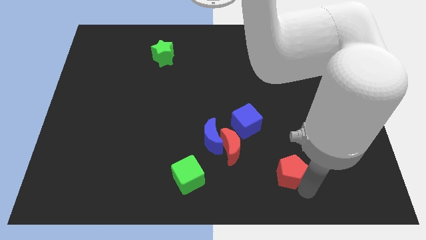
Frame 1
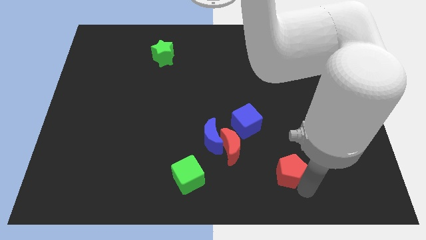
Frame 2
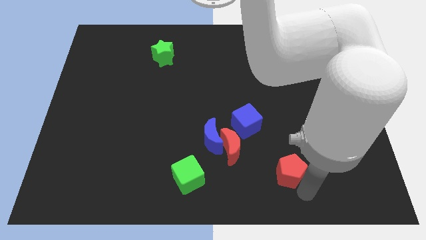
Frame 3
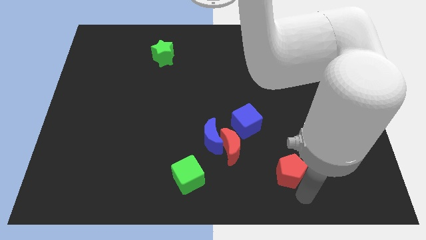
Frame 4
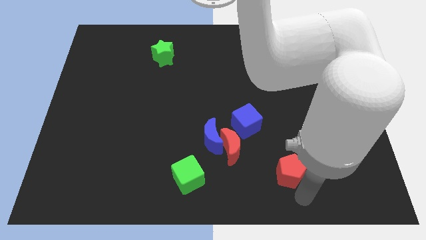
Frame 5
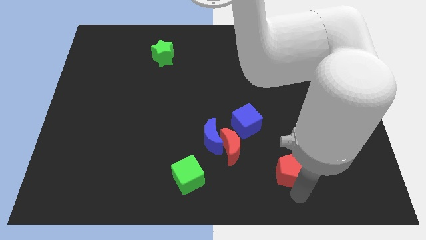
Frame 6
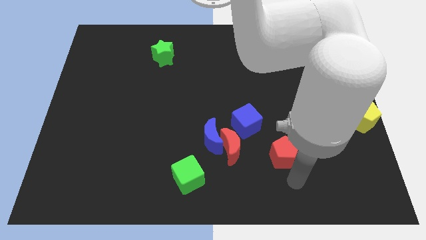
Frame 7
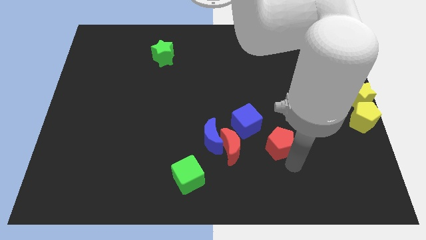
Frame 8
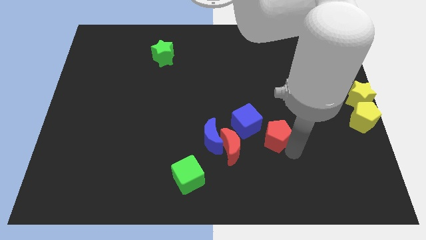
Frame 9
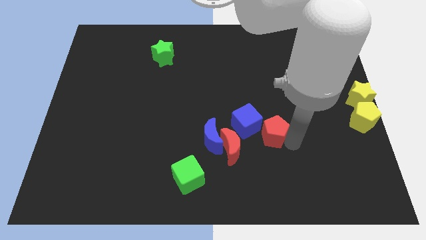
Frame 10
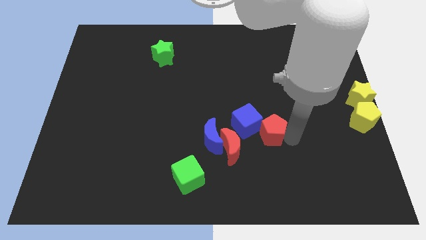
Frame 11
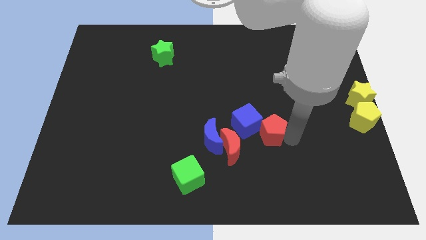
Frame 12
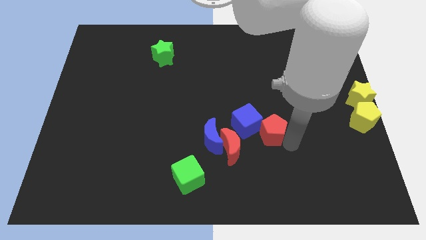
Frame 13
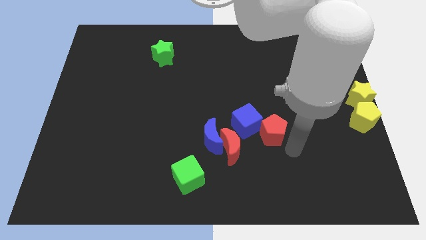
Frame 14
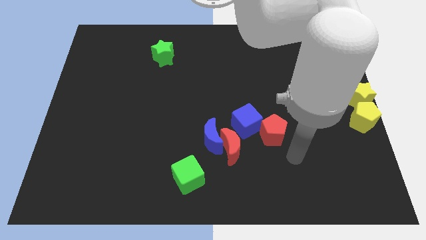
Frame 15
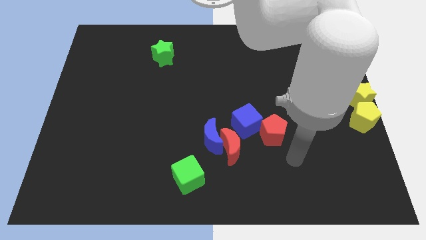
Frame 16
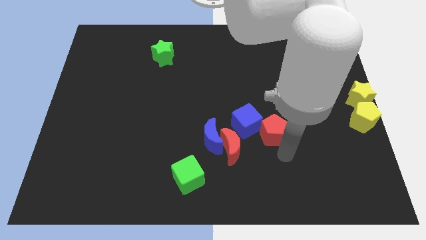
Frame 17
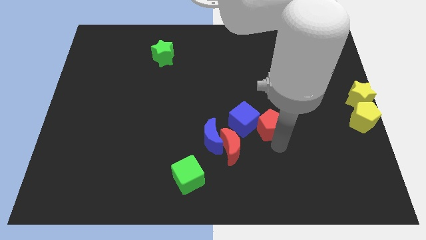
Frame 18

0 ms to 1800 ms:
place red pentagon to the bottom right of the blue cube

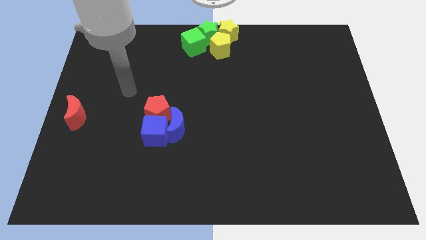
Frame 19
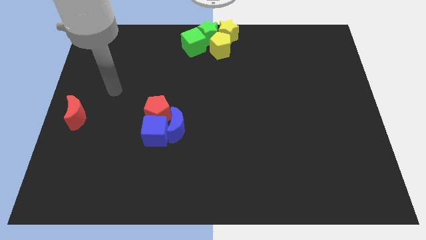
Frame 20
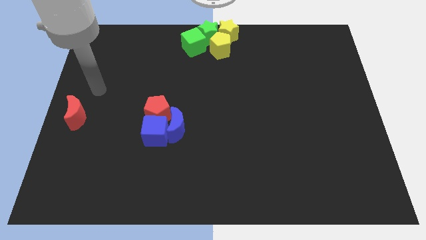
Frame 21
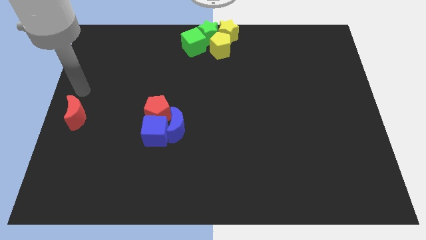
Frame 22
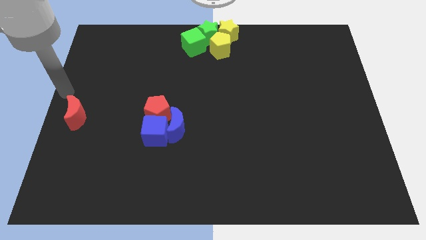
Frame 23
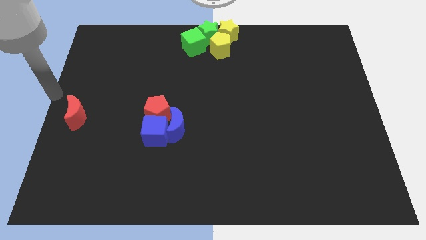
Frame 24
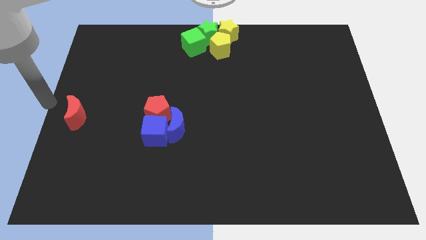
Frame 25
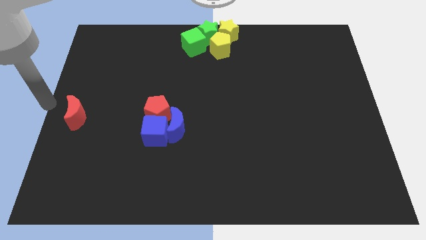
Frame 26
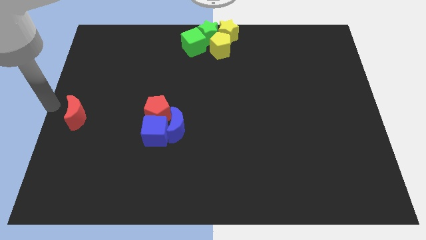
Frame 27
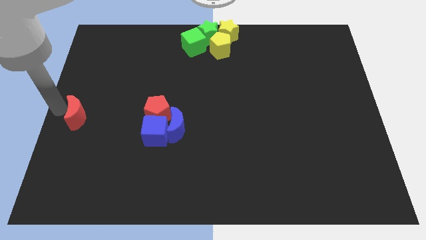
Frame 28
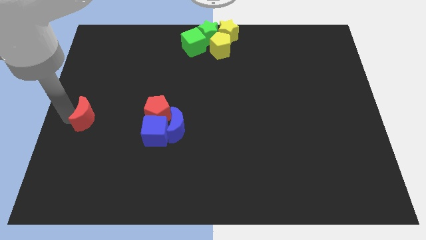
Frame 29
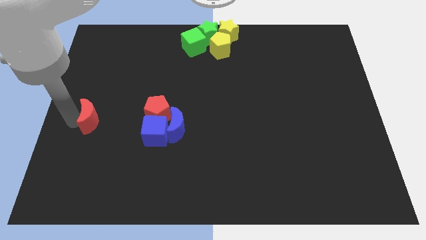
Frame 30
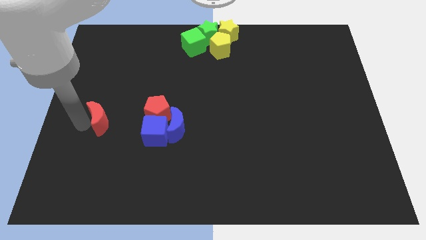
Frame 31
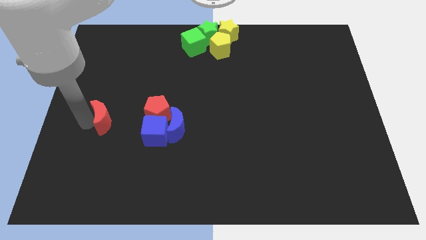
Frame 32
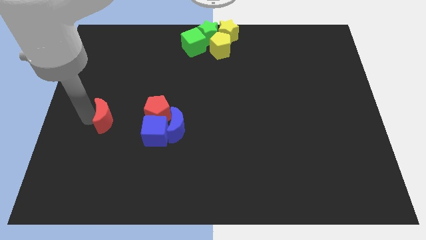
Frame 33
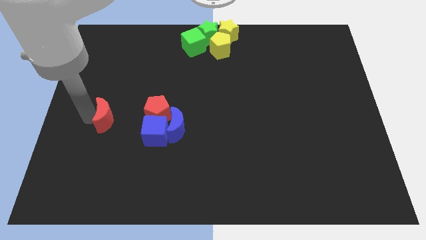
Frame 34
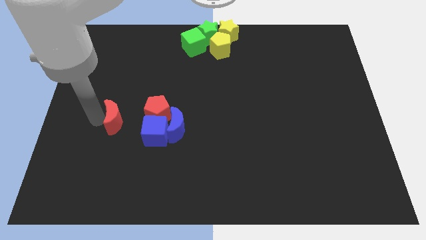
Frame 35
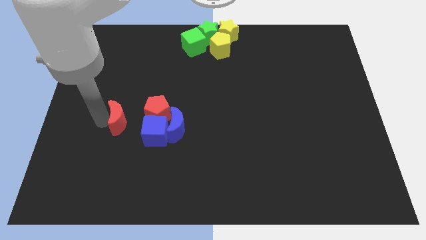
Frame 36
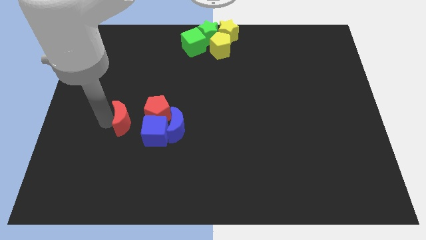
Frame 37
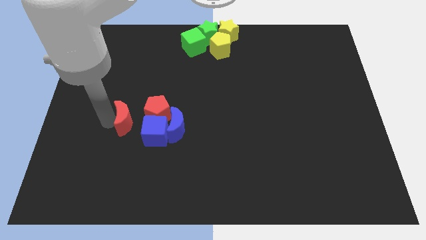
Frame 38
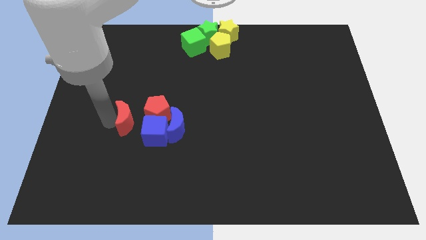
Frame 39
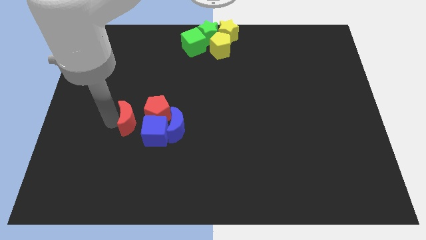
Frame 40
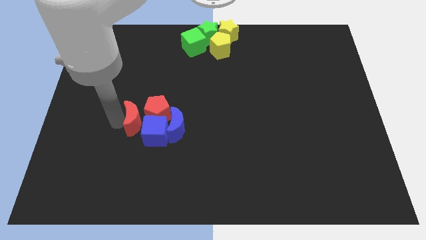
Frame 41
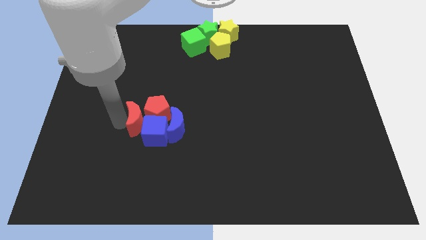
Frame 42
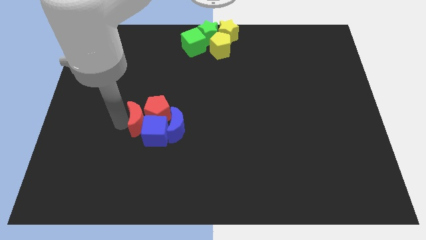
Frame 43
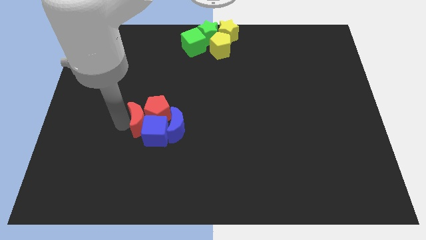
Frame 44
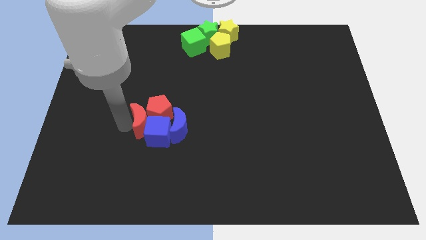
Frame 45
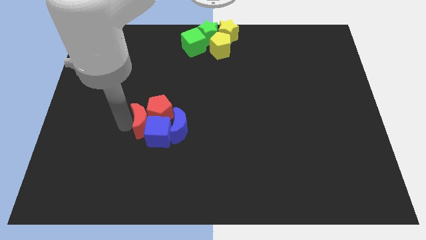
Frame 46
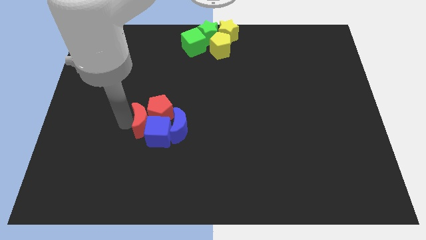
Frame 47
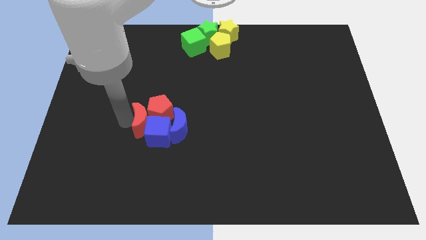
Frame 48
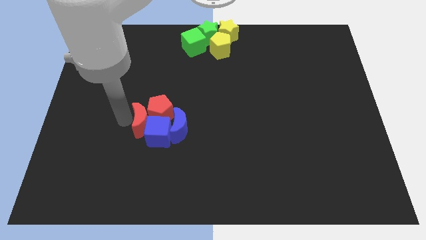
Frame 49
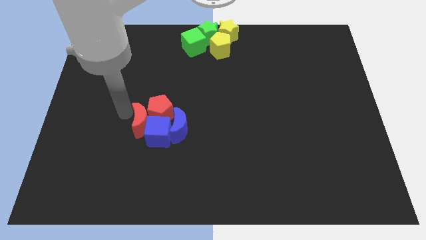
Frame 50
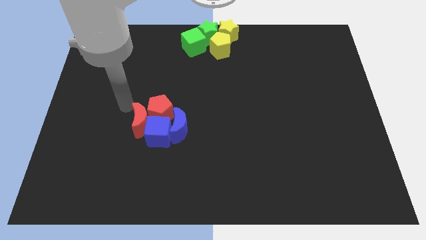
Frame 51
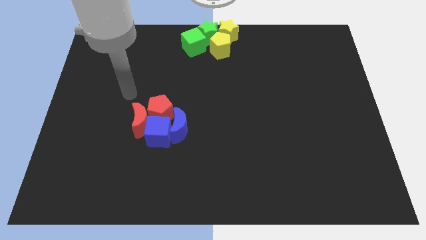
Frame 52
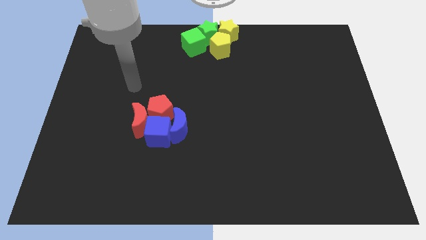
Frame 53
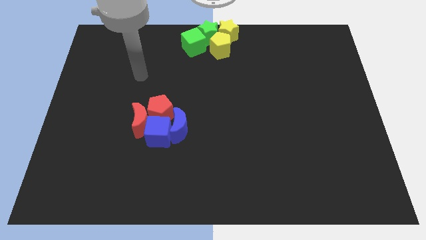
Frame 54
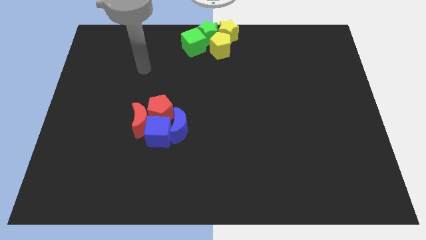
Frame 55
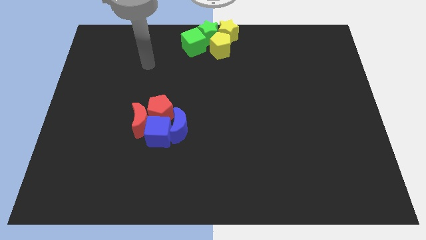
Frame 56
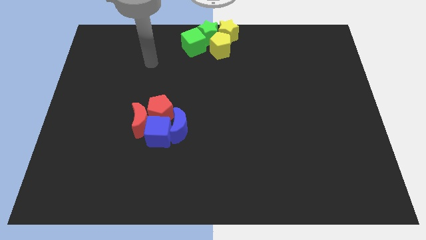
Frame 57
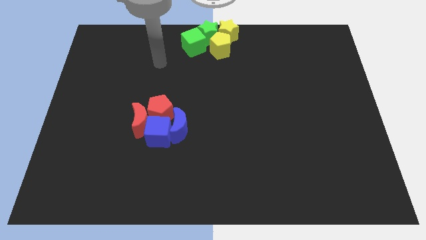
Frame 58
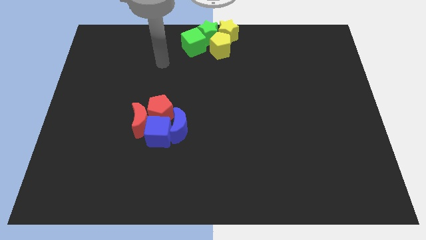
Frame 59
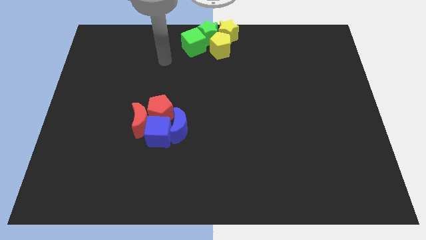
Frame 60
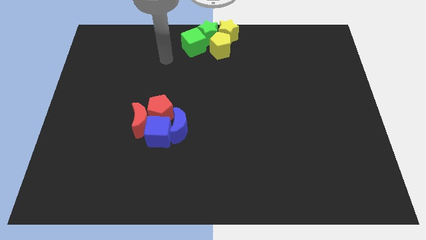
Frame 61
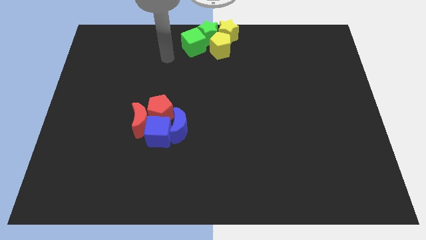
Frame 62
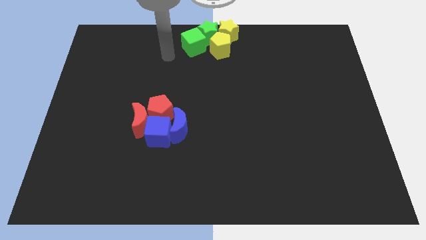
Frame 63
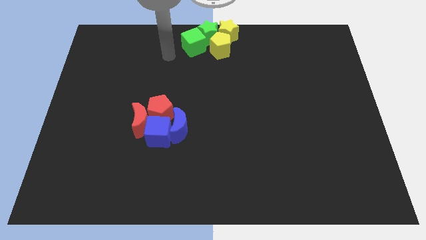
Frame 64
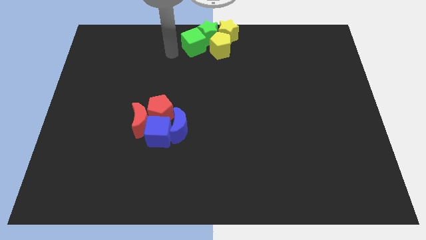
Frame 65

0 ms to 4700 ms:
move red moon near to the red pentagon

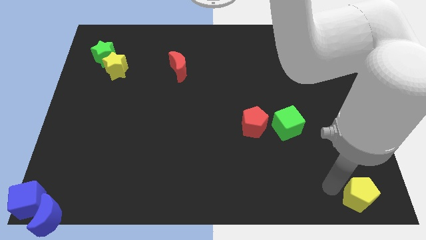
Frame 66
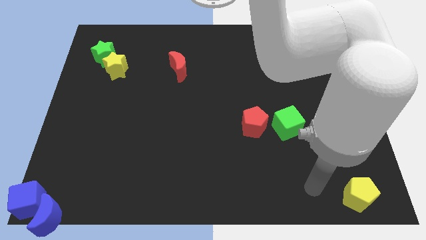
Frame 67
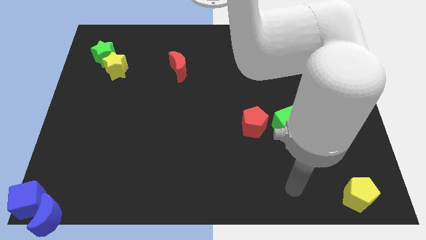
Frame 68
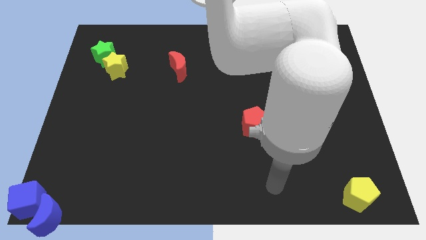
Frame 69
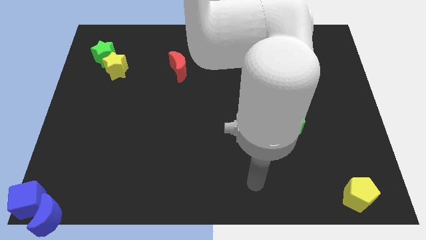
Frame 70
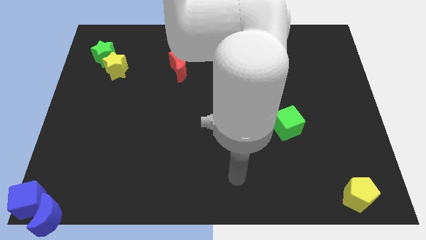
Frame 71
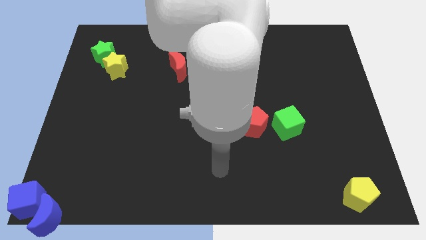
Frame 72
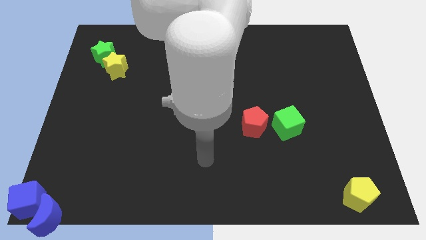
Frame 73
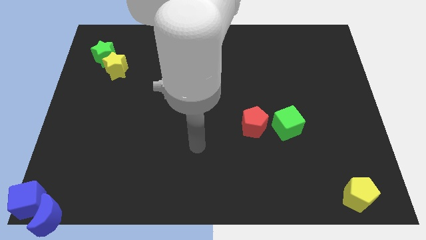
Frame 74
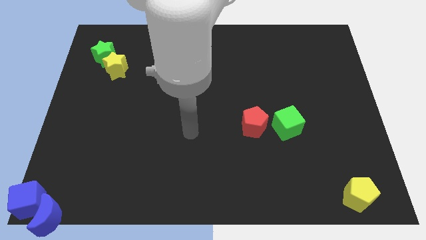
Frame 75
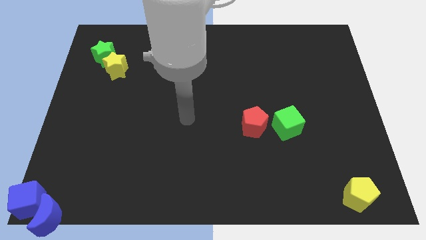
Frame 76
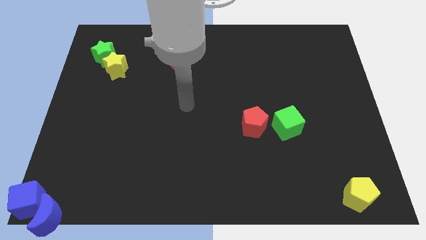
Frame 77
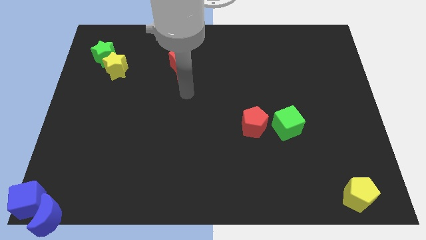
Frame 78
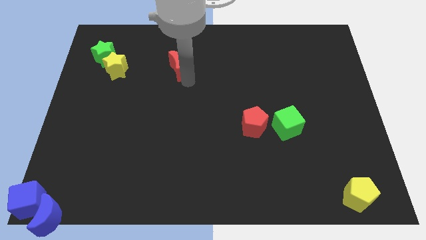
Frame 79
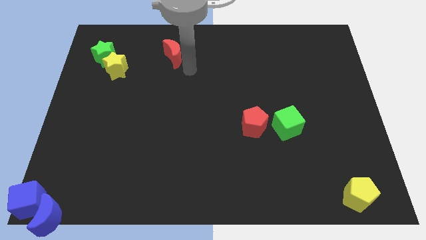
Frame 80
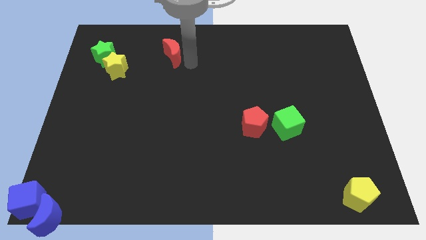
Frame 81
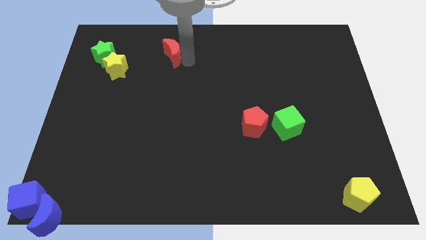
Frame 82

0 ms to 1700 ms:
move your arm away from yellow pentagon

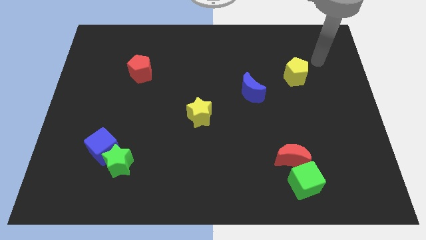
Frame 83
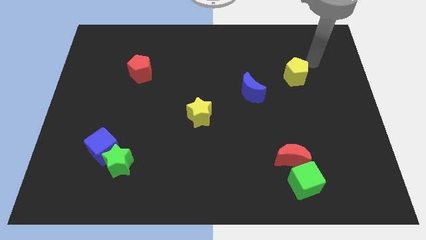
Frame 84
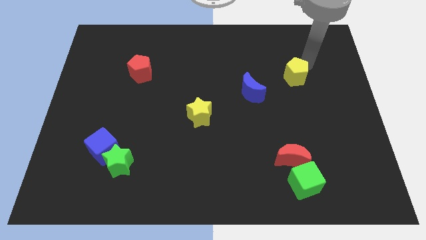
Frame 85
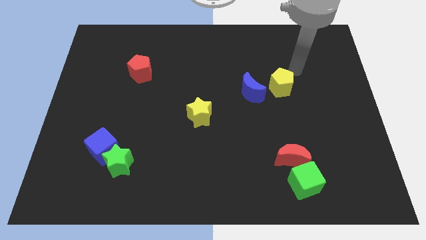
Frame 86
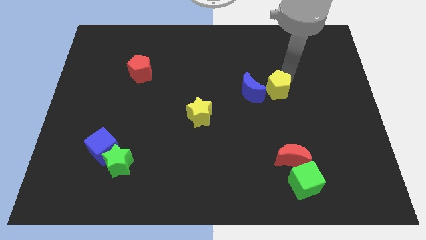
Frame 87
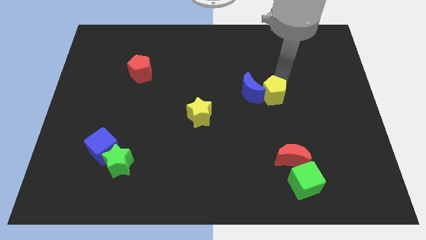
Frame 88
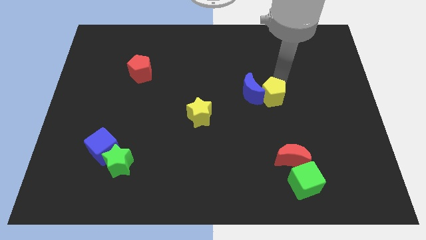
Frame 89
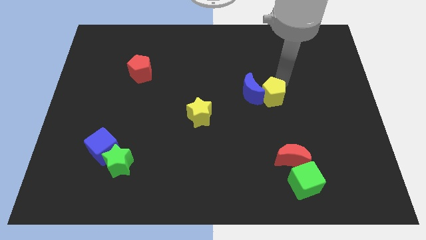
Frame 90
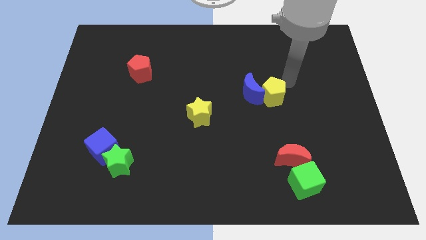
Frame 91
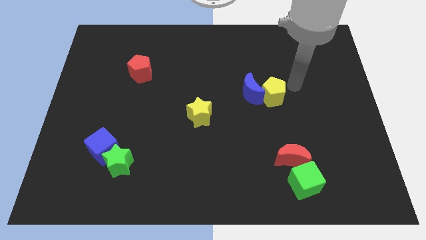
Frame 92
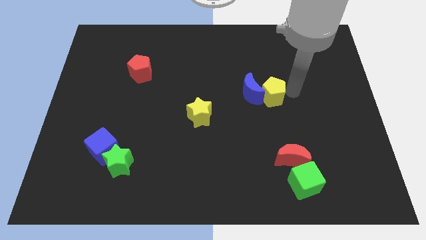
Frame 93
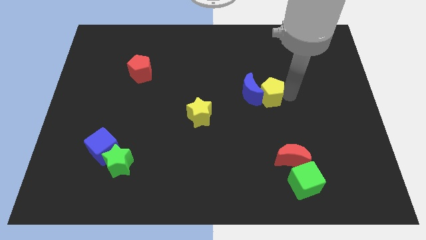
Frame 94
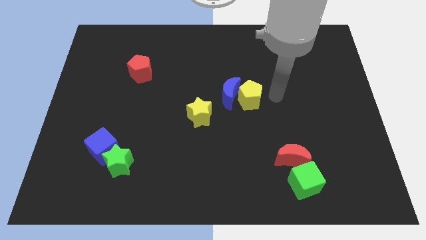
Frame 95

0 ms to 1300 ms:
move yellow pentagon into the right side of the blue moon
